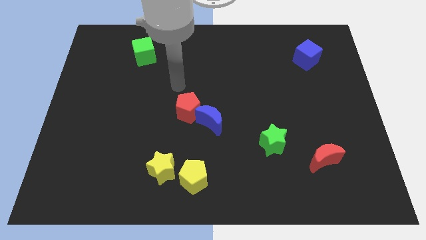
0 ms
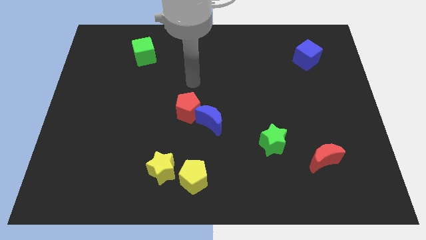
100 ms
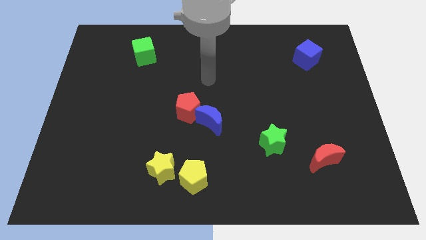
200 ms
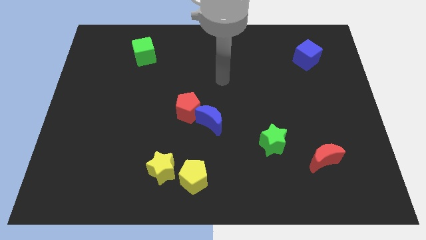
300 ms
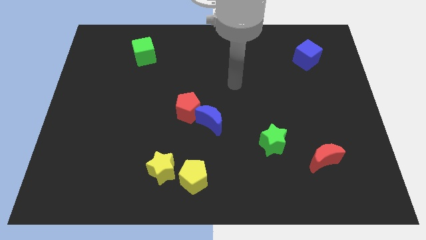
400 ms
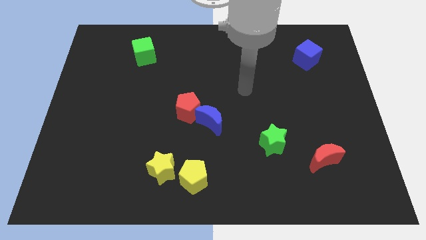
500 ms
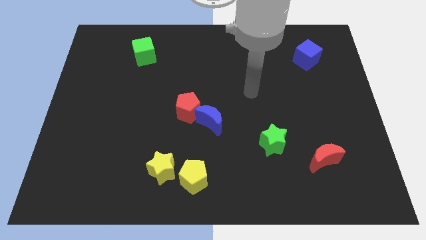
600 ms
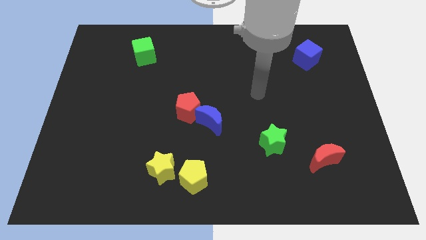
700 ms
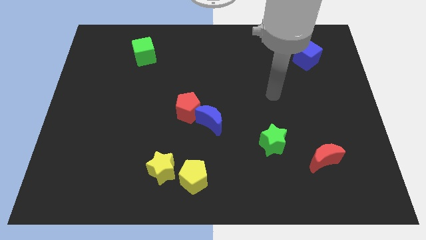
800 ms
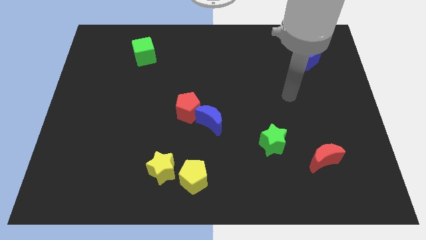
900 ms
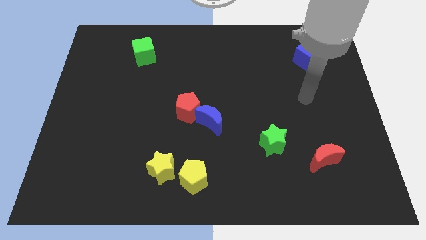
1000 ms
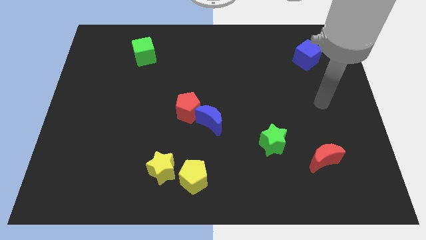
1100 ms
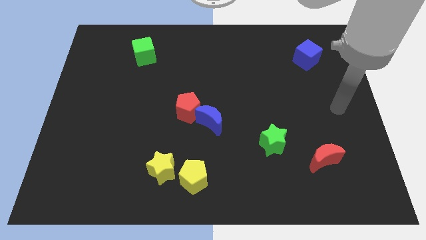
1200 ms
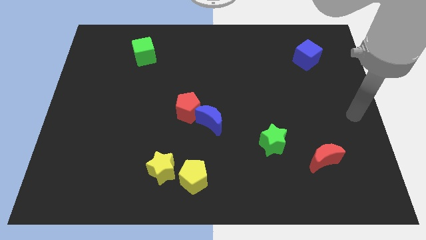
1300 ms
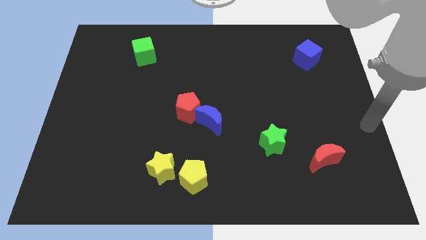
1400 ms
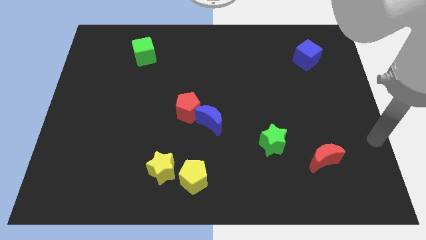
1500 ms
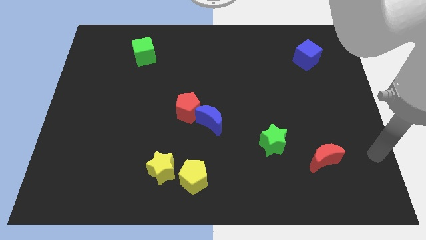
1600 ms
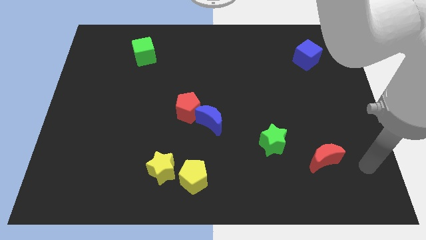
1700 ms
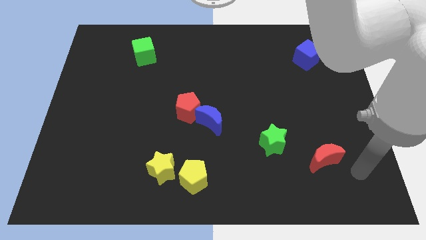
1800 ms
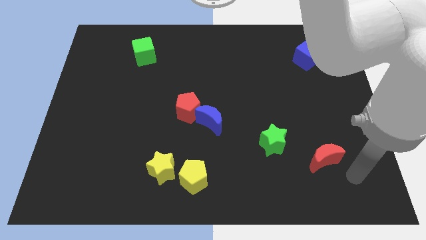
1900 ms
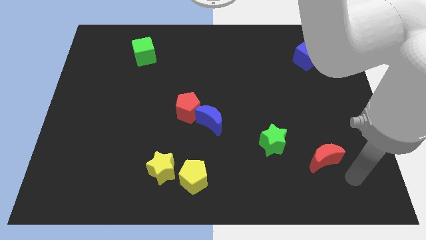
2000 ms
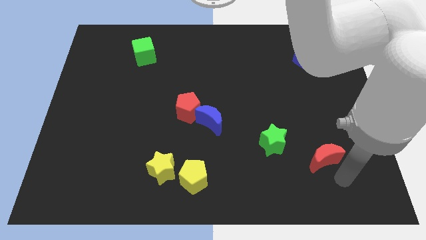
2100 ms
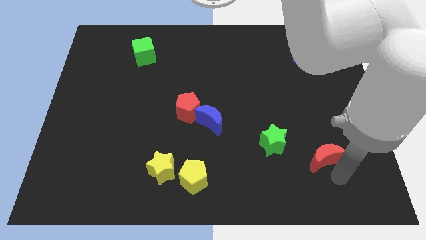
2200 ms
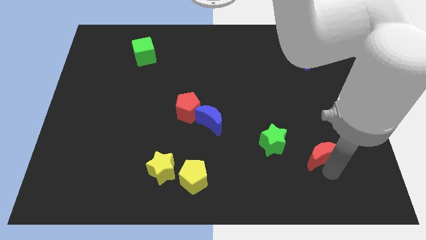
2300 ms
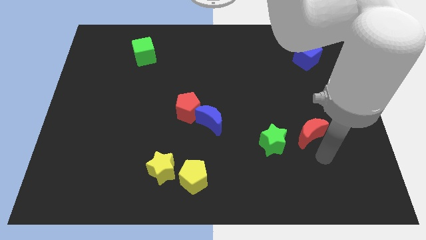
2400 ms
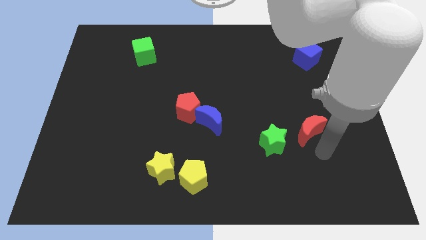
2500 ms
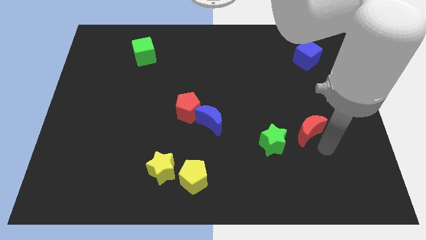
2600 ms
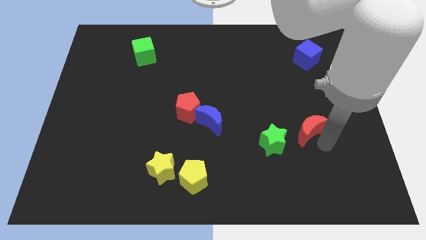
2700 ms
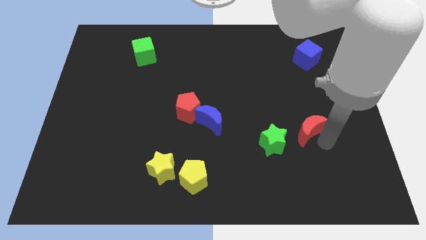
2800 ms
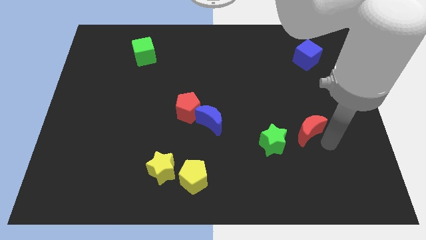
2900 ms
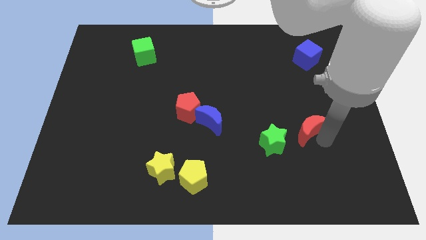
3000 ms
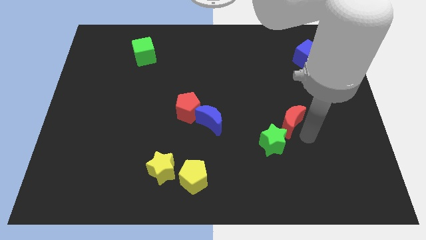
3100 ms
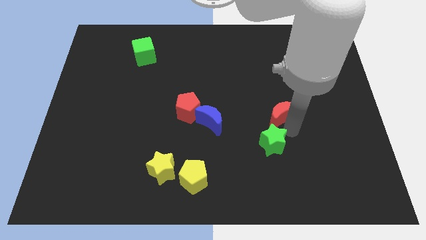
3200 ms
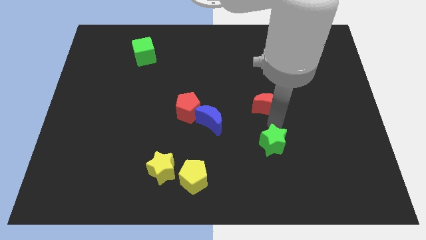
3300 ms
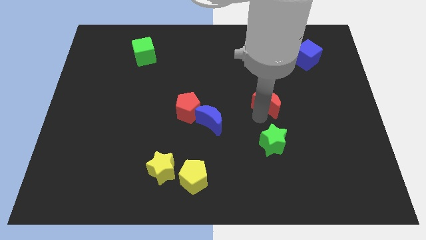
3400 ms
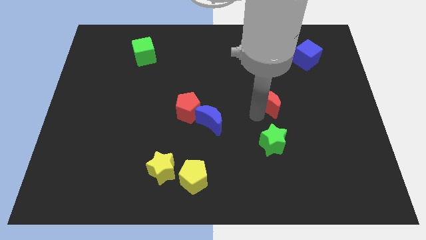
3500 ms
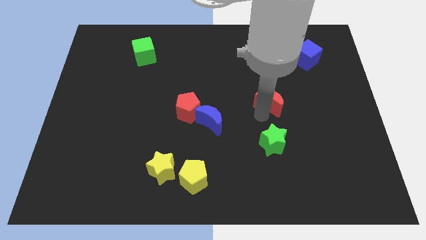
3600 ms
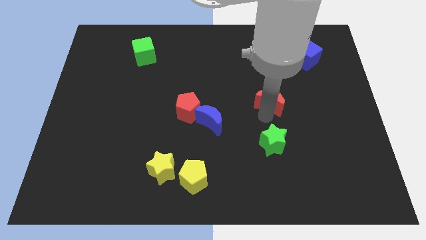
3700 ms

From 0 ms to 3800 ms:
place the red moon above the green star

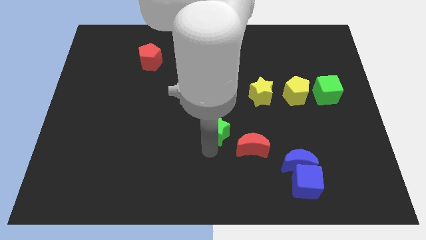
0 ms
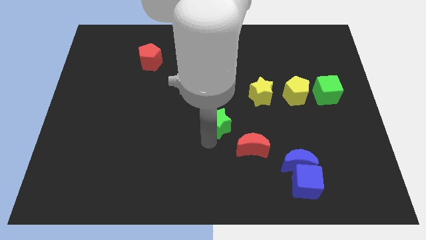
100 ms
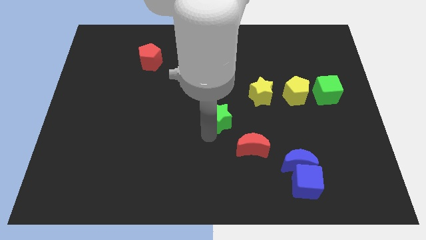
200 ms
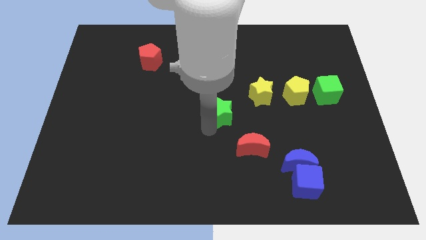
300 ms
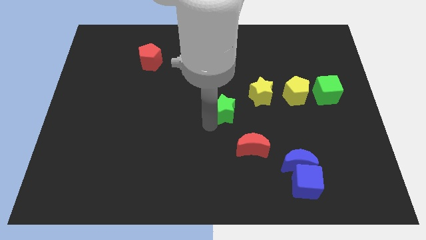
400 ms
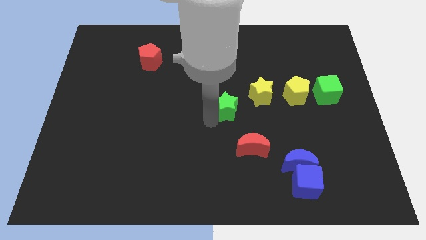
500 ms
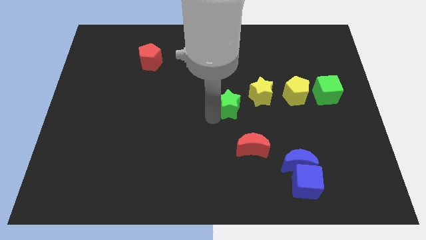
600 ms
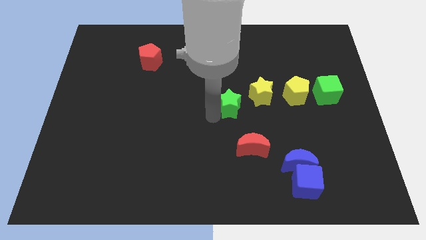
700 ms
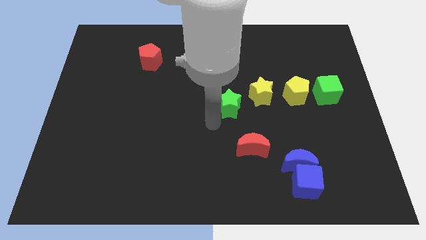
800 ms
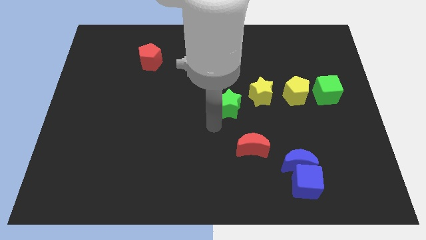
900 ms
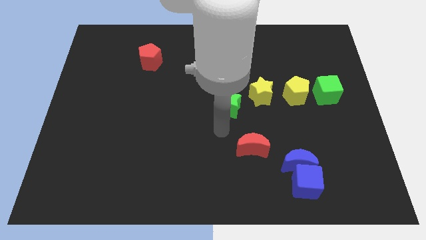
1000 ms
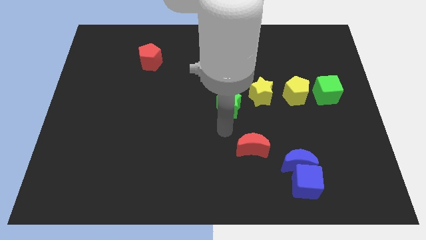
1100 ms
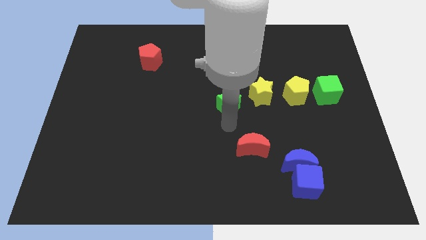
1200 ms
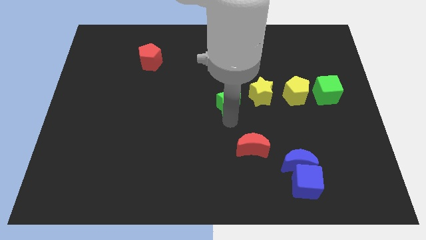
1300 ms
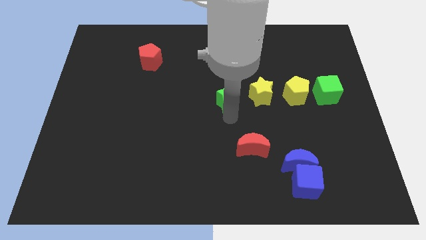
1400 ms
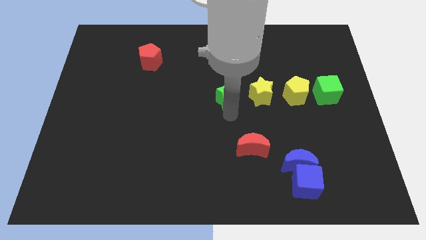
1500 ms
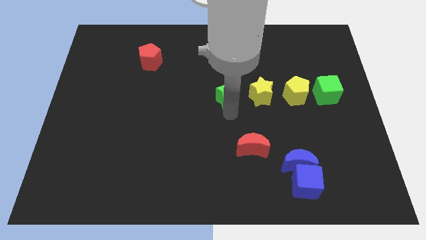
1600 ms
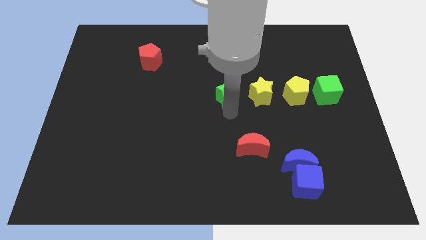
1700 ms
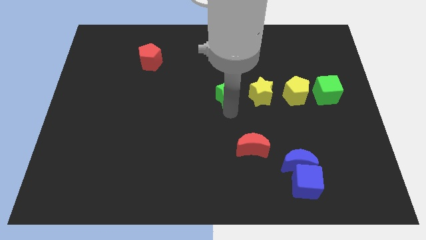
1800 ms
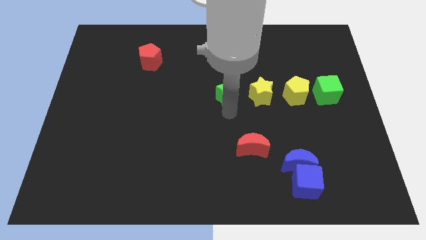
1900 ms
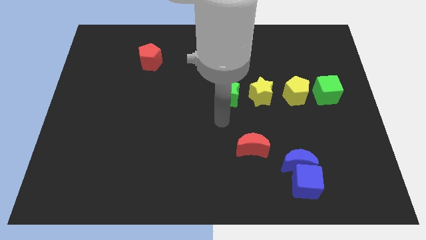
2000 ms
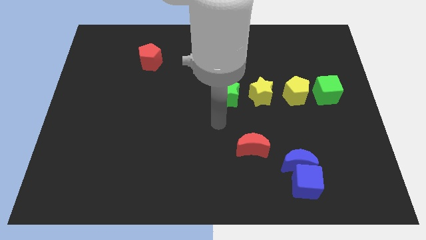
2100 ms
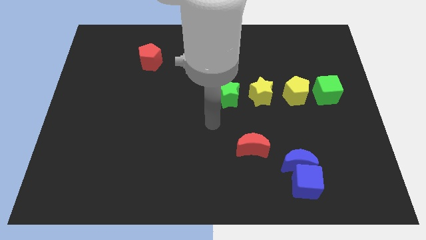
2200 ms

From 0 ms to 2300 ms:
put the green star on the left side of the yellow star

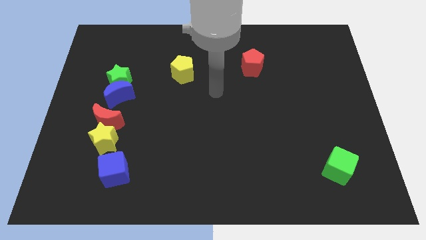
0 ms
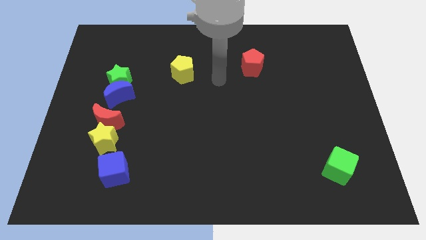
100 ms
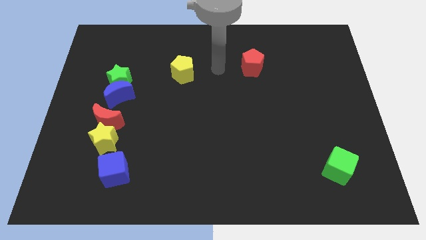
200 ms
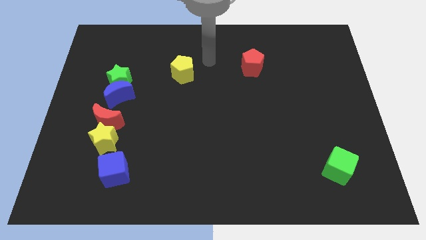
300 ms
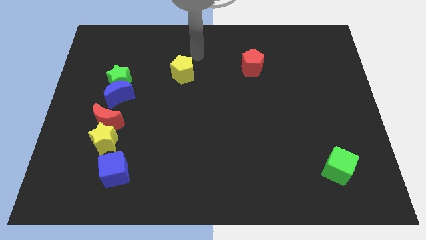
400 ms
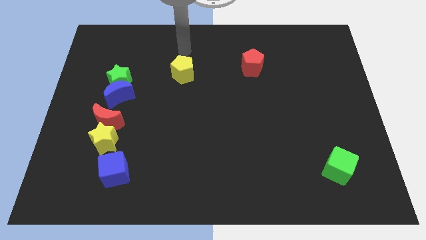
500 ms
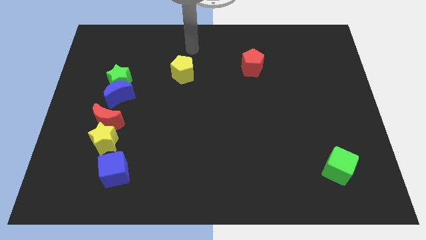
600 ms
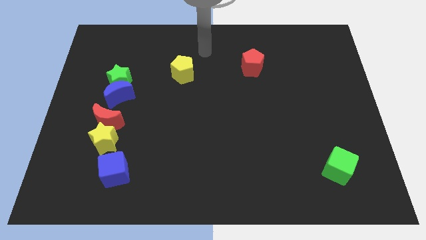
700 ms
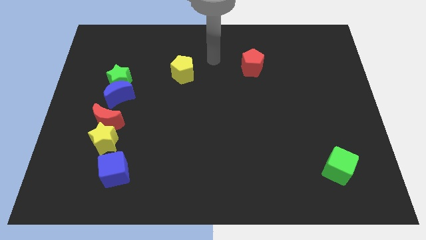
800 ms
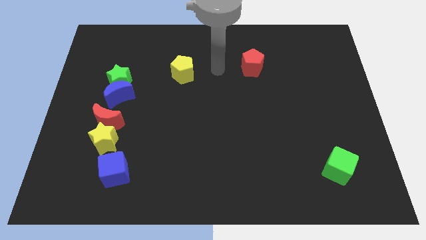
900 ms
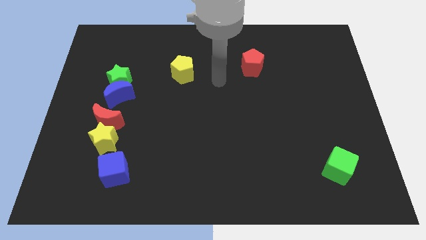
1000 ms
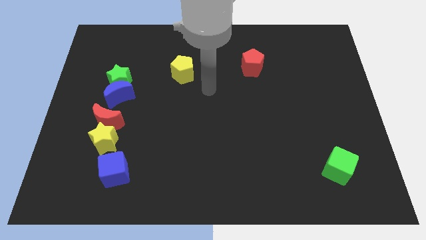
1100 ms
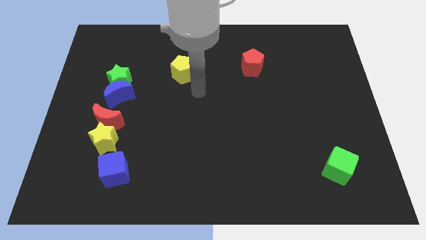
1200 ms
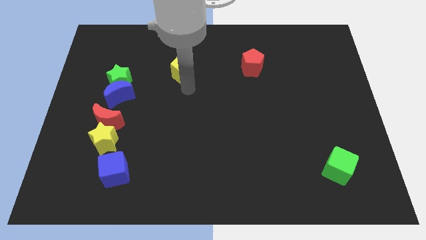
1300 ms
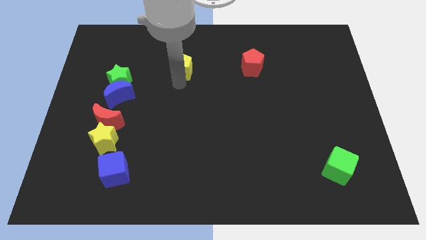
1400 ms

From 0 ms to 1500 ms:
point your arm at the bottom side of the yellow pentagon

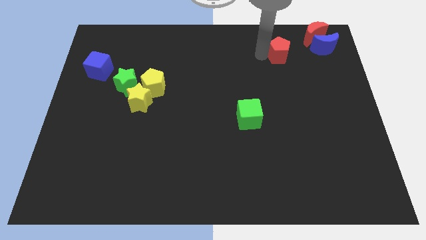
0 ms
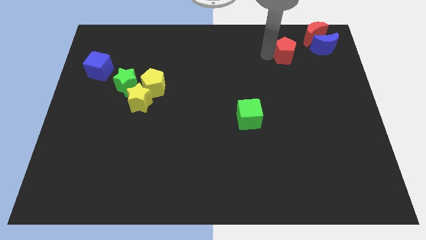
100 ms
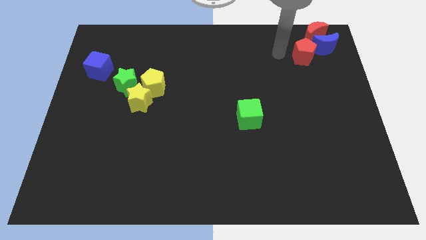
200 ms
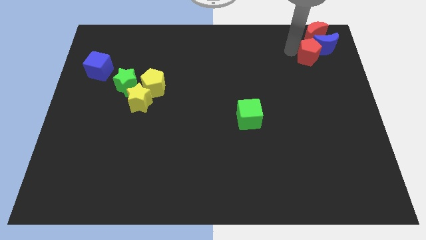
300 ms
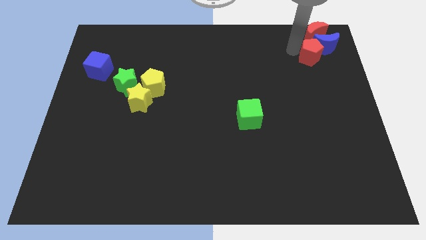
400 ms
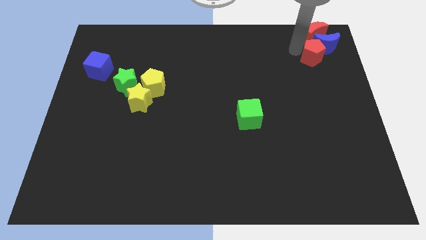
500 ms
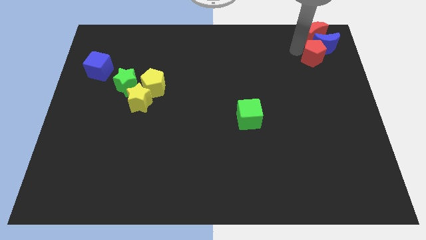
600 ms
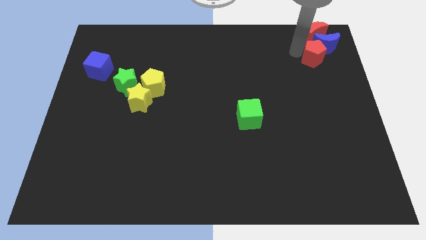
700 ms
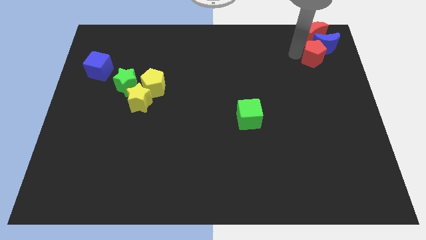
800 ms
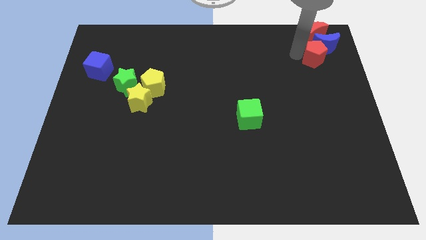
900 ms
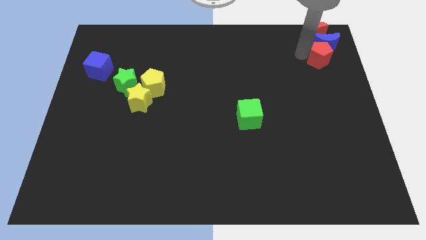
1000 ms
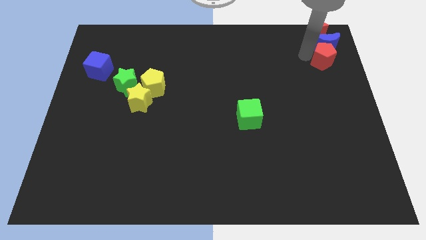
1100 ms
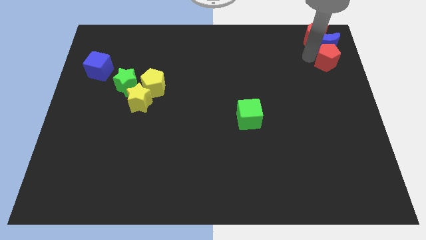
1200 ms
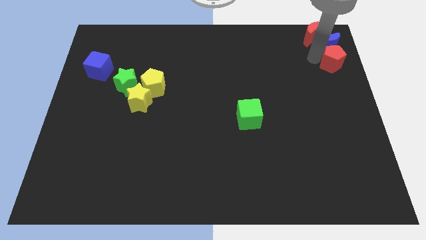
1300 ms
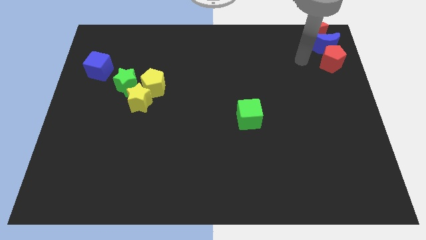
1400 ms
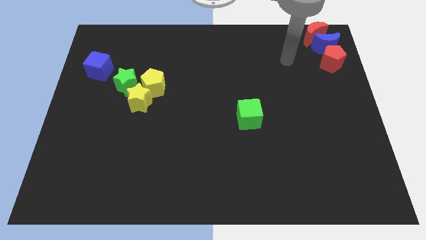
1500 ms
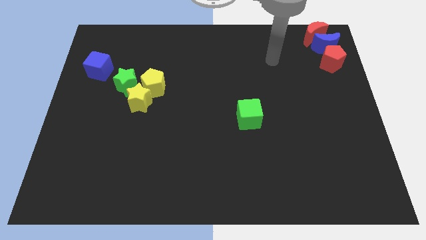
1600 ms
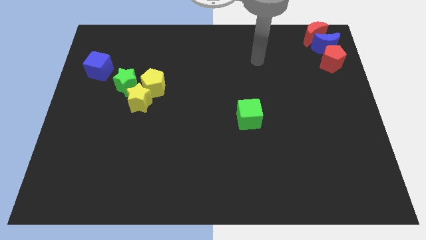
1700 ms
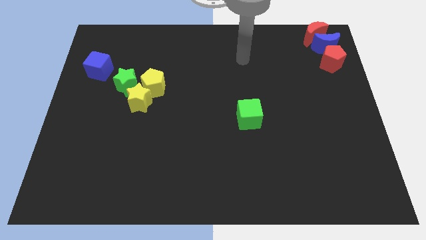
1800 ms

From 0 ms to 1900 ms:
add the red pentagon to the vertical line of blocks which are at the top right side
